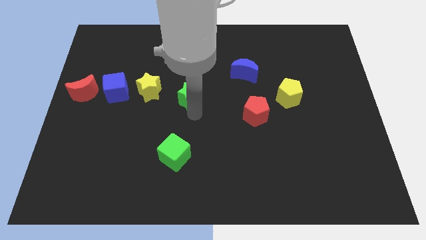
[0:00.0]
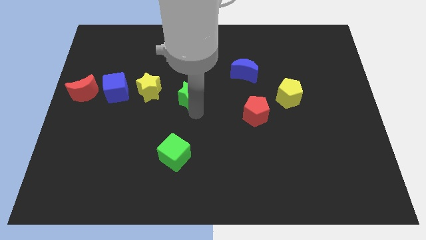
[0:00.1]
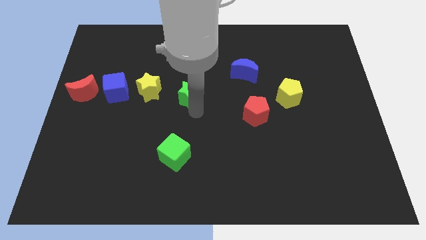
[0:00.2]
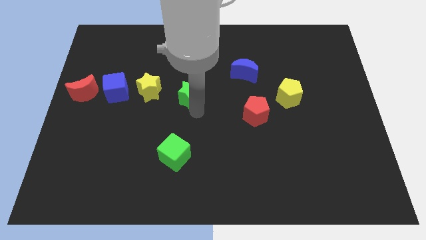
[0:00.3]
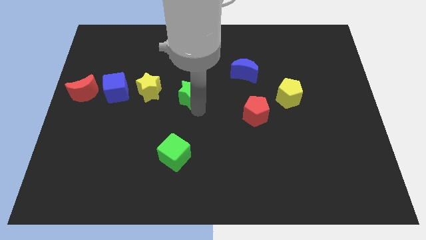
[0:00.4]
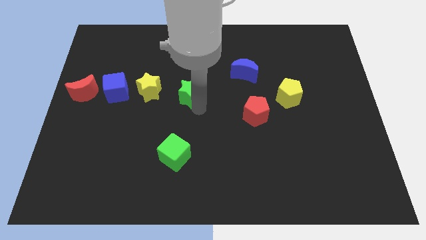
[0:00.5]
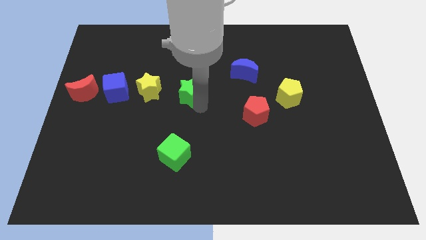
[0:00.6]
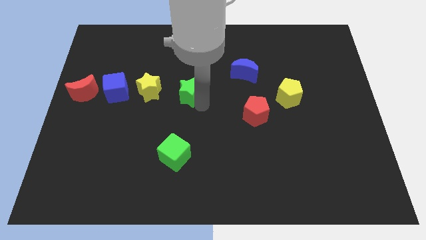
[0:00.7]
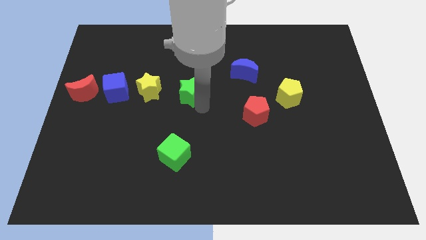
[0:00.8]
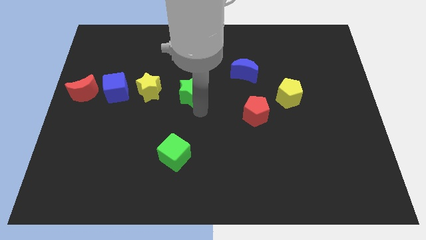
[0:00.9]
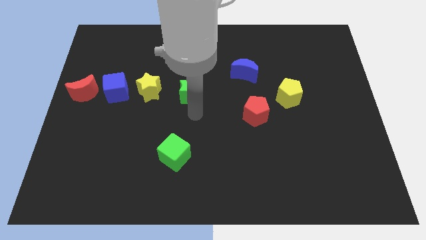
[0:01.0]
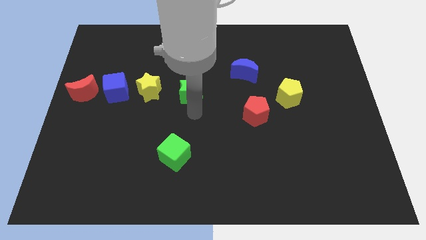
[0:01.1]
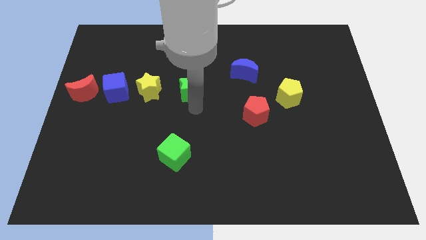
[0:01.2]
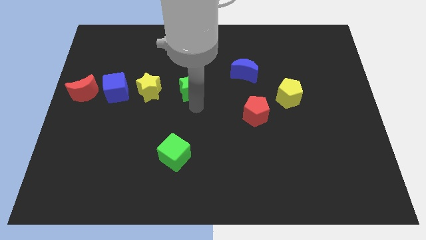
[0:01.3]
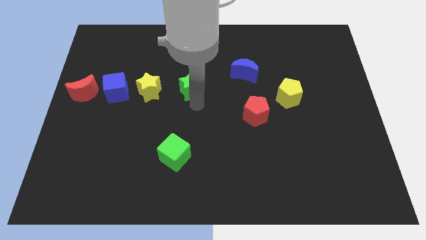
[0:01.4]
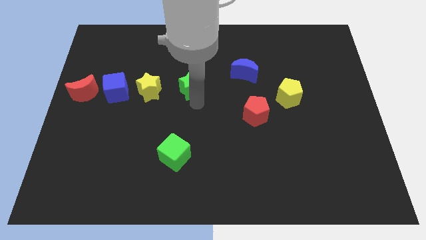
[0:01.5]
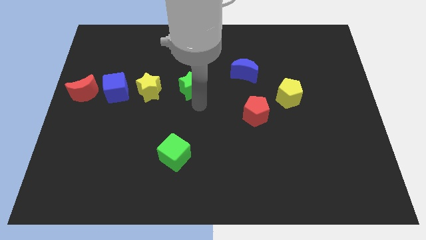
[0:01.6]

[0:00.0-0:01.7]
move the green star parallel to the yellow star at the right side

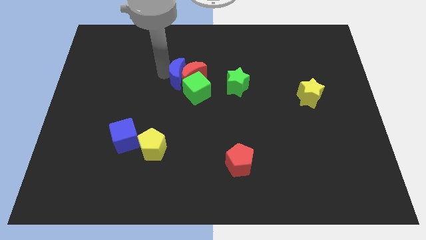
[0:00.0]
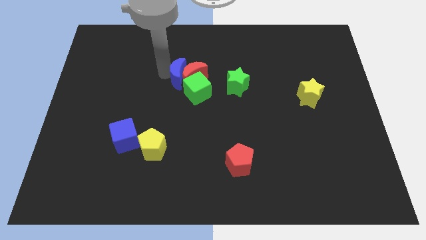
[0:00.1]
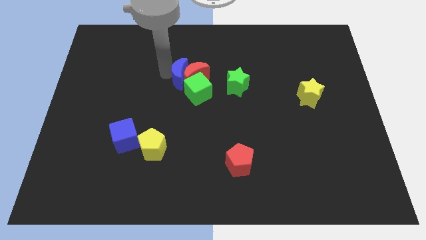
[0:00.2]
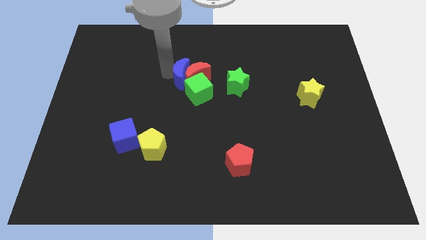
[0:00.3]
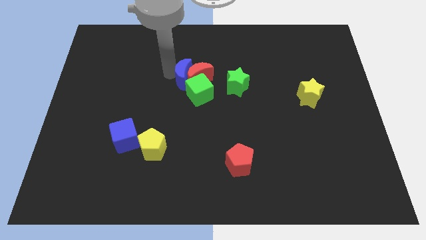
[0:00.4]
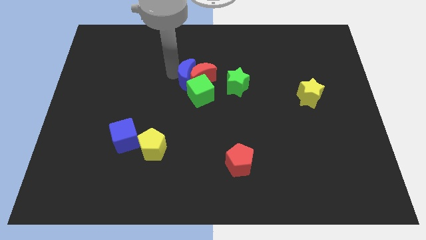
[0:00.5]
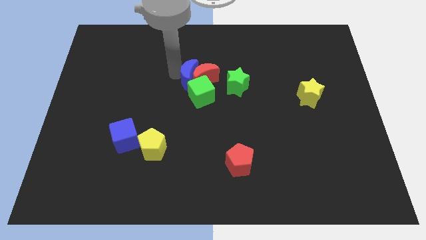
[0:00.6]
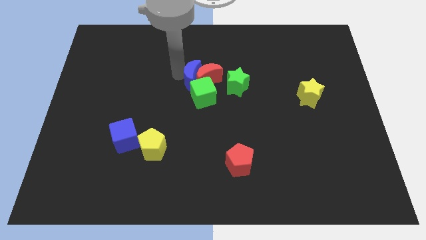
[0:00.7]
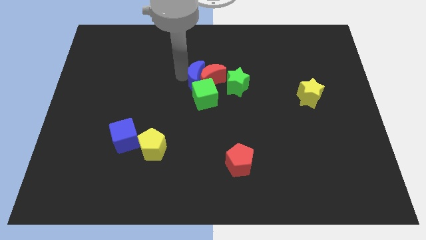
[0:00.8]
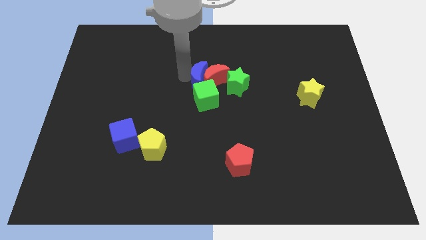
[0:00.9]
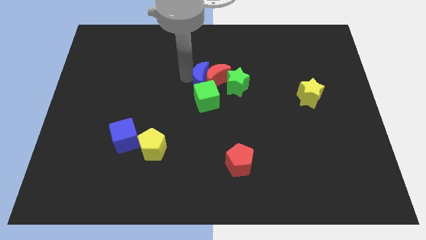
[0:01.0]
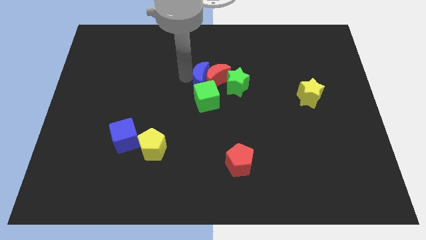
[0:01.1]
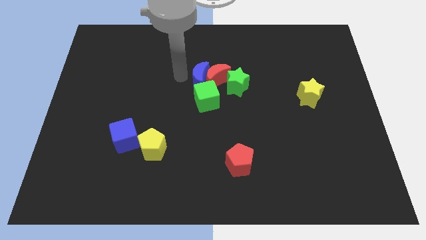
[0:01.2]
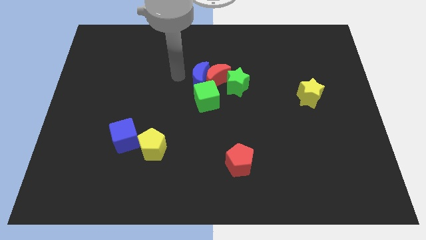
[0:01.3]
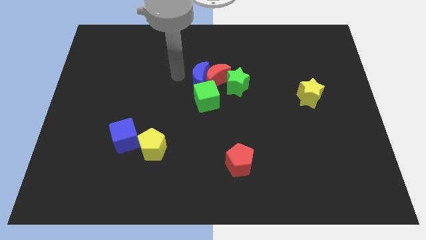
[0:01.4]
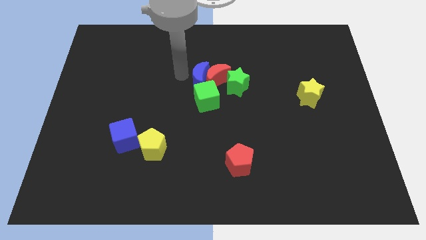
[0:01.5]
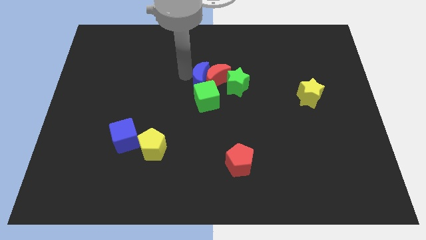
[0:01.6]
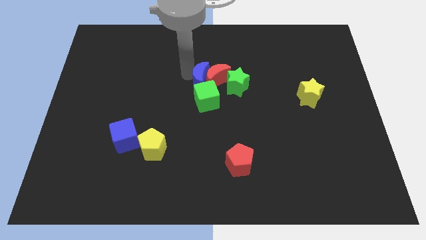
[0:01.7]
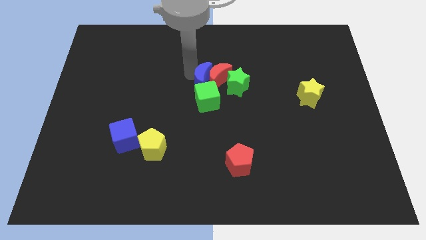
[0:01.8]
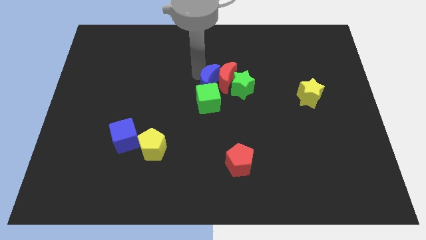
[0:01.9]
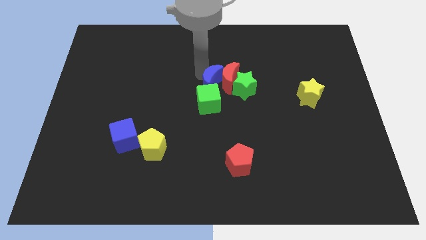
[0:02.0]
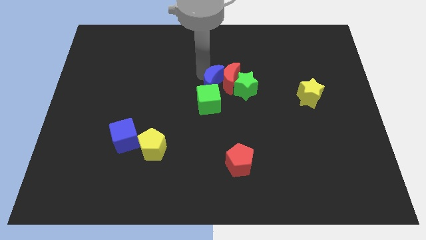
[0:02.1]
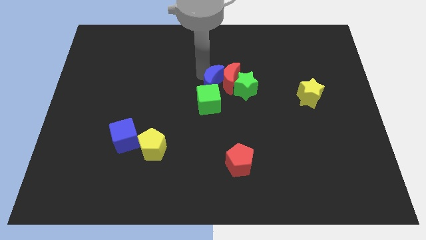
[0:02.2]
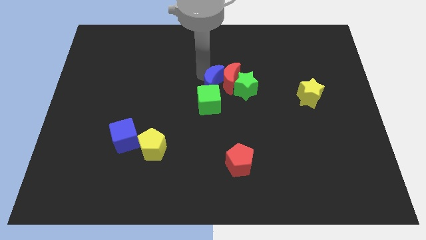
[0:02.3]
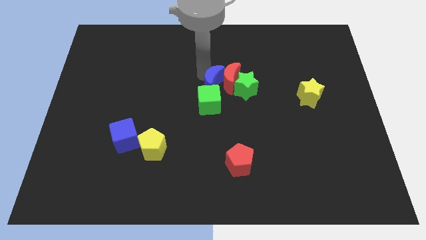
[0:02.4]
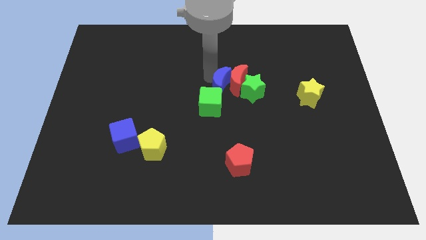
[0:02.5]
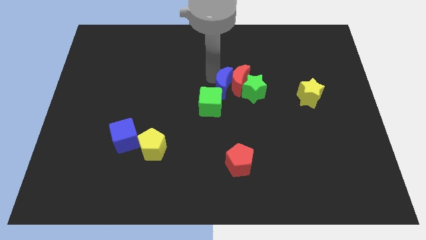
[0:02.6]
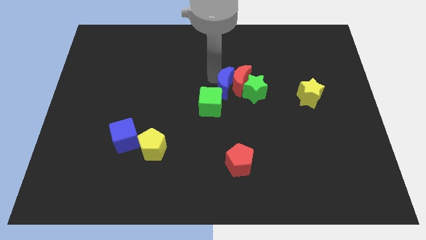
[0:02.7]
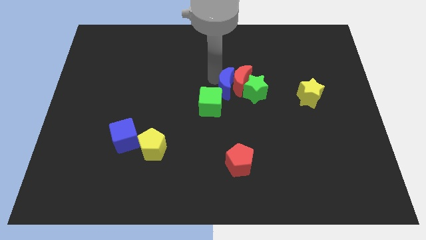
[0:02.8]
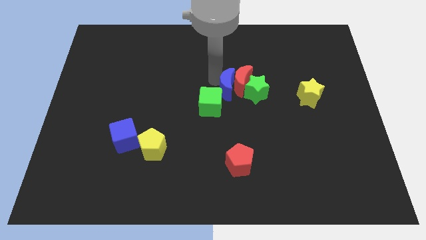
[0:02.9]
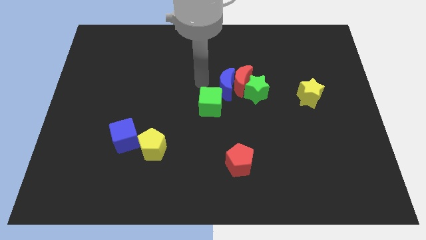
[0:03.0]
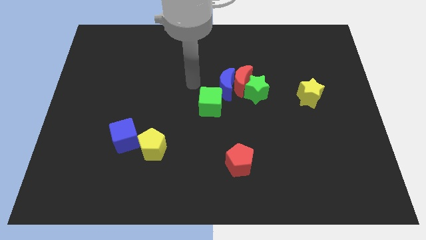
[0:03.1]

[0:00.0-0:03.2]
push the blue moon along with the red moon into the green star

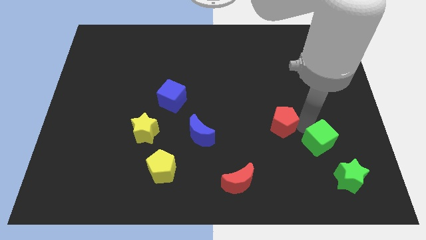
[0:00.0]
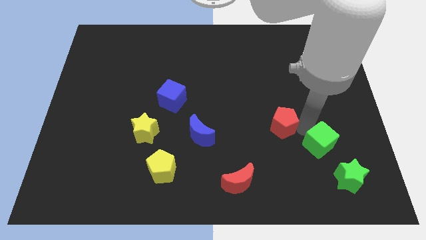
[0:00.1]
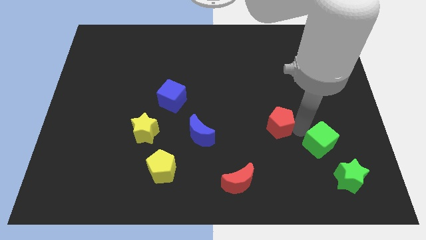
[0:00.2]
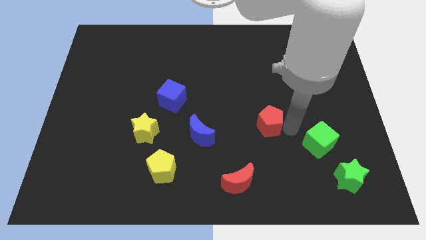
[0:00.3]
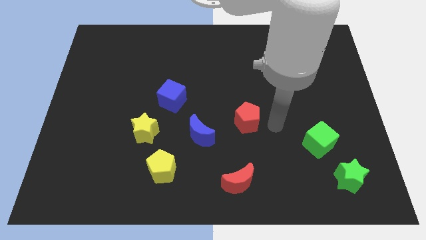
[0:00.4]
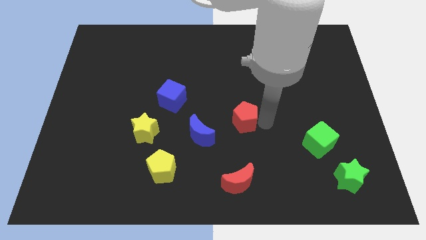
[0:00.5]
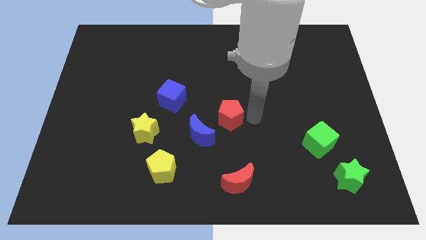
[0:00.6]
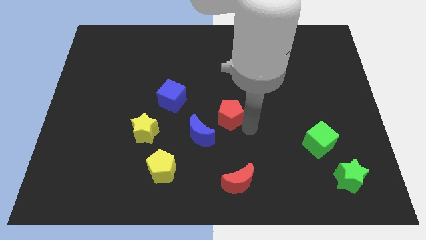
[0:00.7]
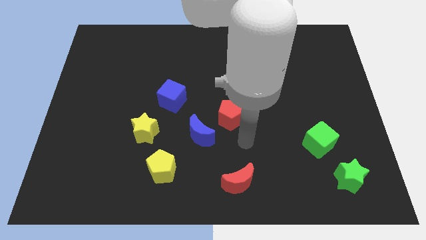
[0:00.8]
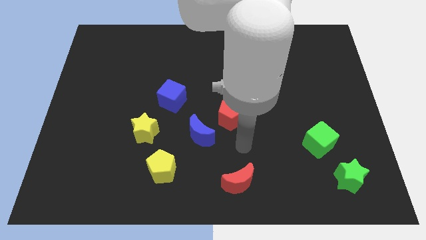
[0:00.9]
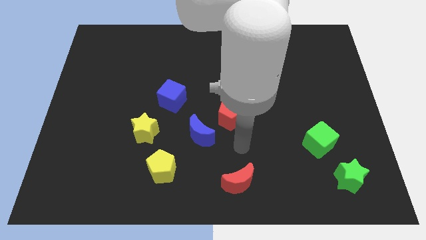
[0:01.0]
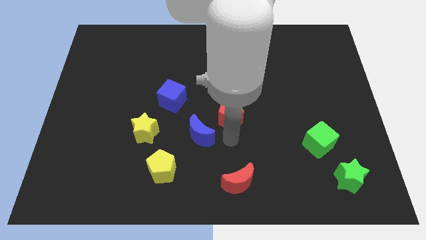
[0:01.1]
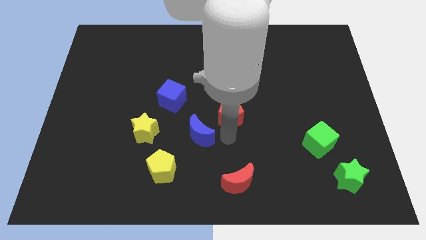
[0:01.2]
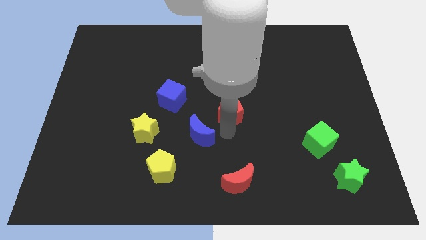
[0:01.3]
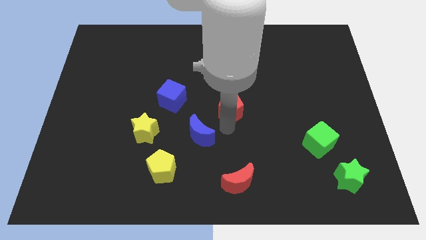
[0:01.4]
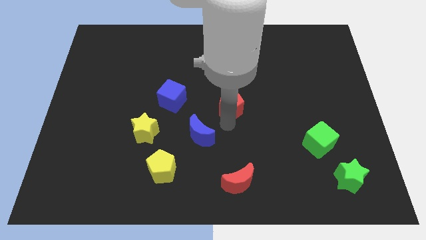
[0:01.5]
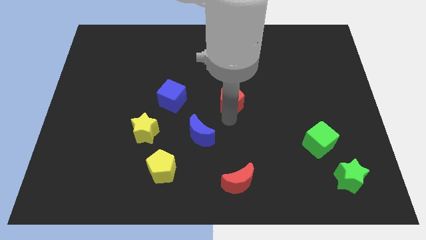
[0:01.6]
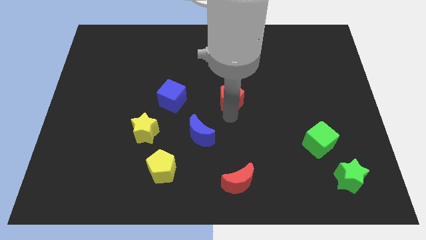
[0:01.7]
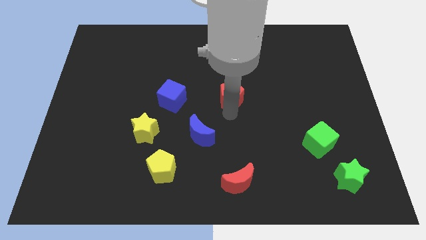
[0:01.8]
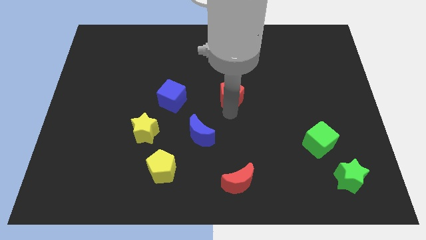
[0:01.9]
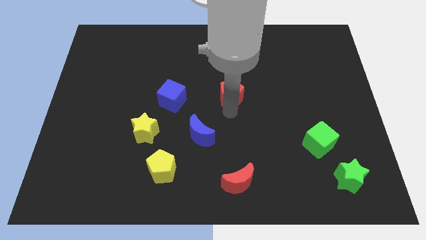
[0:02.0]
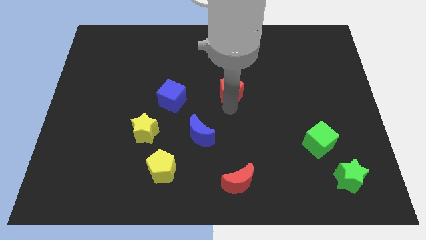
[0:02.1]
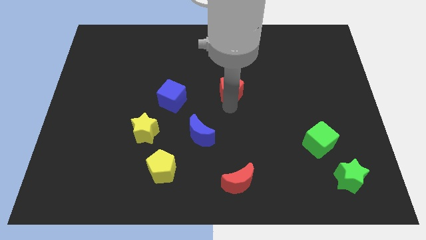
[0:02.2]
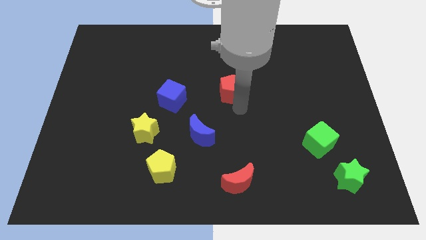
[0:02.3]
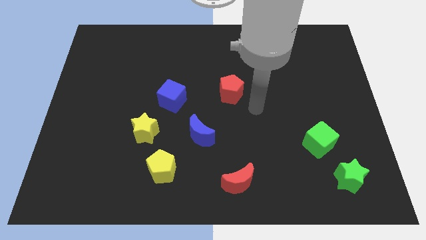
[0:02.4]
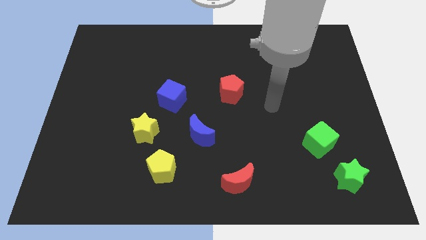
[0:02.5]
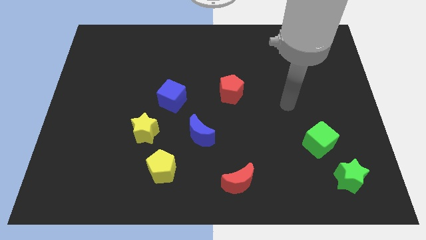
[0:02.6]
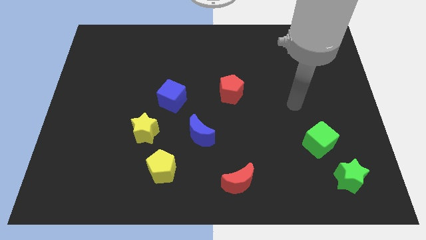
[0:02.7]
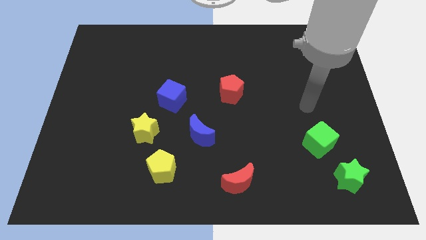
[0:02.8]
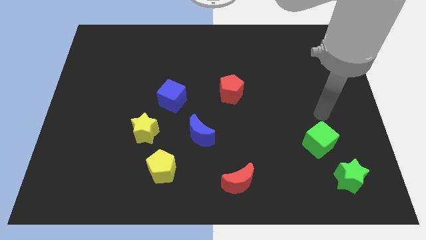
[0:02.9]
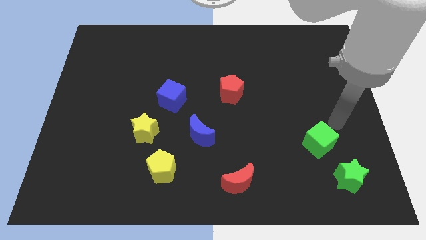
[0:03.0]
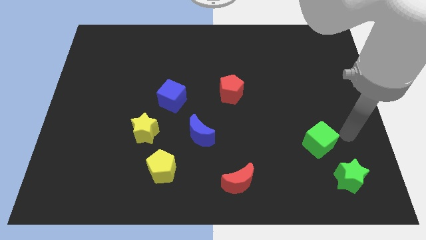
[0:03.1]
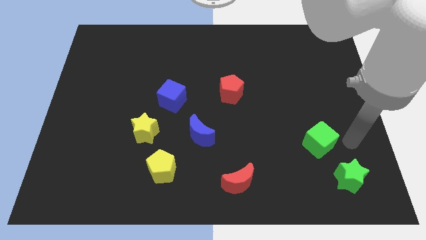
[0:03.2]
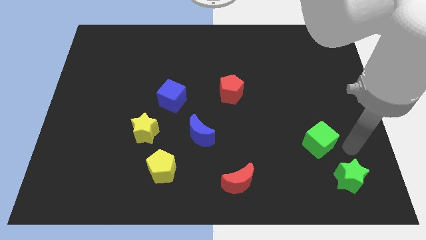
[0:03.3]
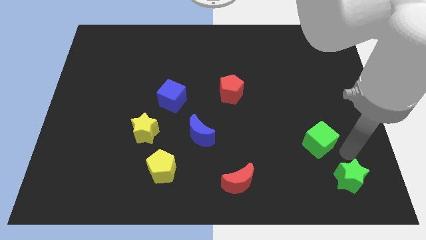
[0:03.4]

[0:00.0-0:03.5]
separate red pentagon from green cube

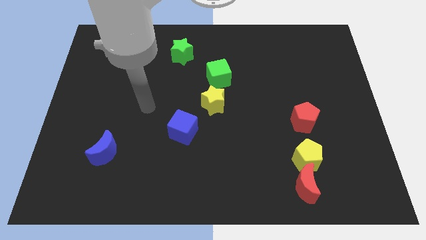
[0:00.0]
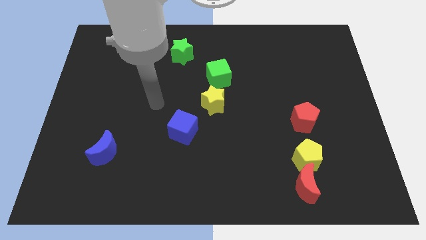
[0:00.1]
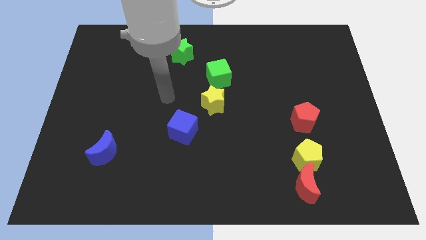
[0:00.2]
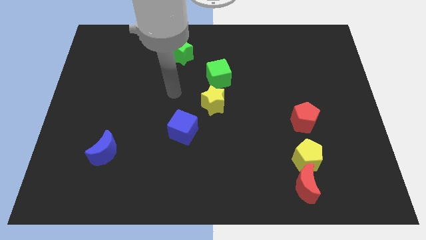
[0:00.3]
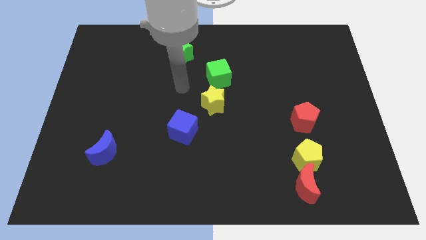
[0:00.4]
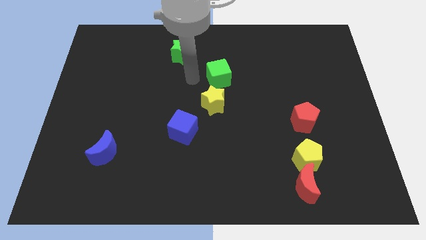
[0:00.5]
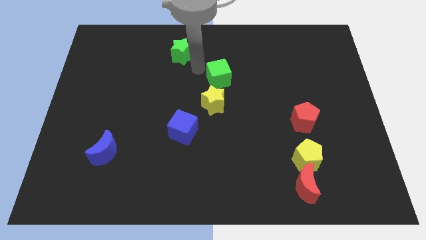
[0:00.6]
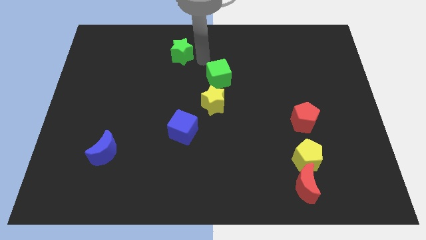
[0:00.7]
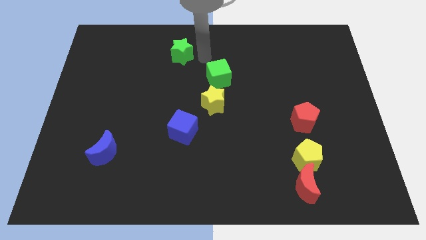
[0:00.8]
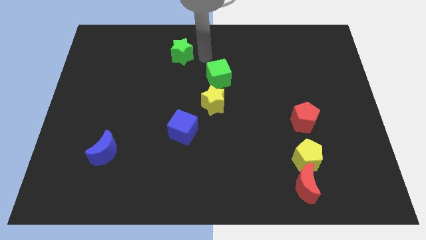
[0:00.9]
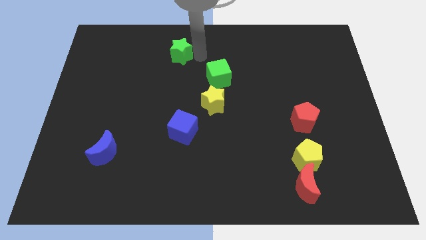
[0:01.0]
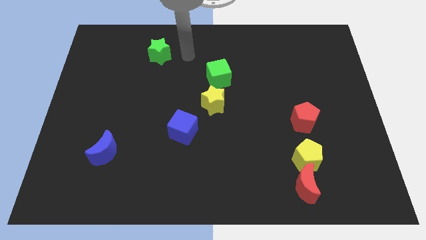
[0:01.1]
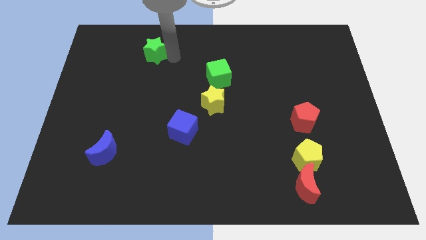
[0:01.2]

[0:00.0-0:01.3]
move the green star to the left on board
